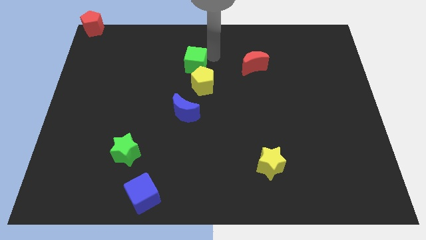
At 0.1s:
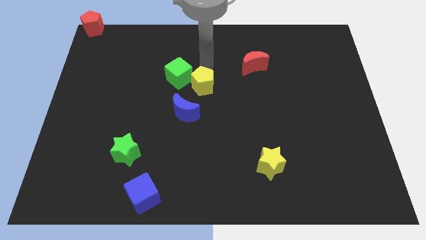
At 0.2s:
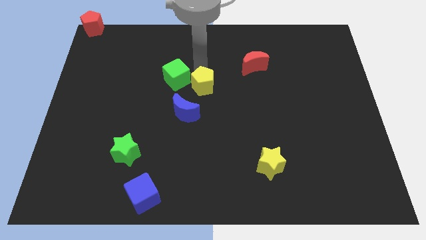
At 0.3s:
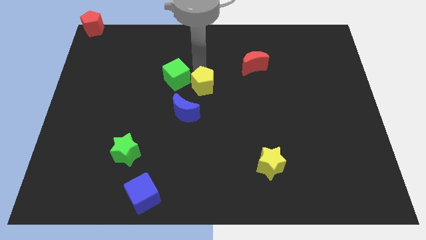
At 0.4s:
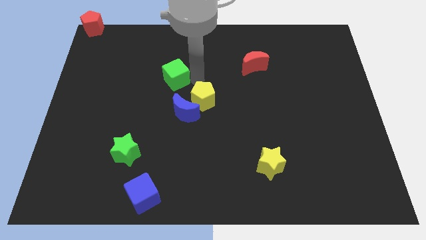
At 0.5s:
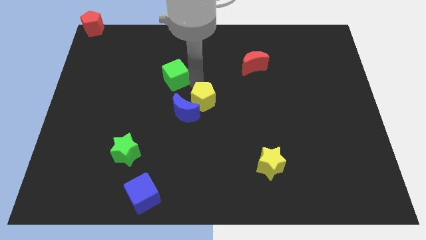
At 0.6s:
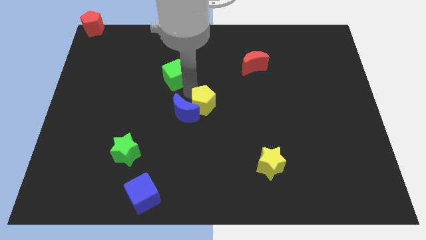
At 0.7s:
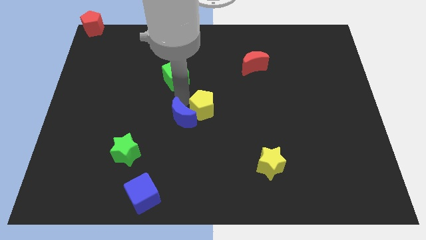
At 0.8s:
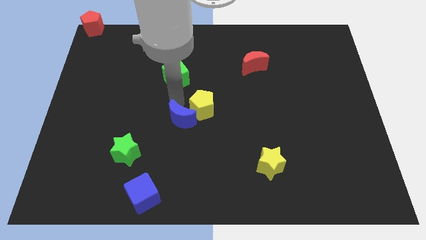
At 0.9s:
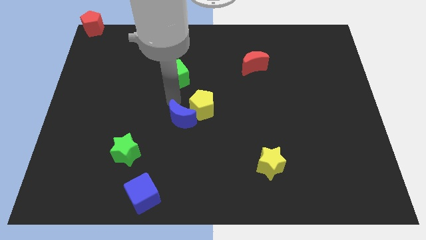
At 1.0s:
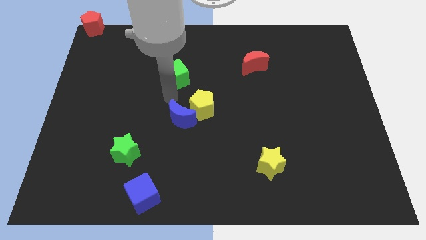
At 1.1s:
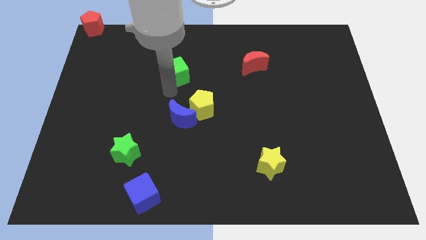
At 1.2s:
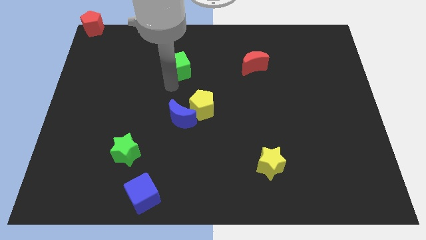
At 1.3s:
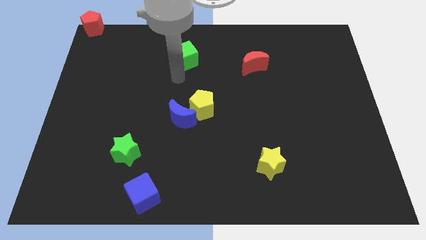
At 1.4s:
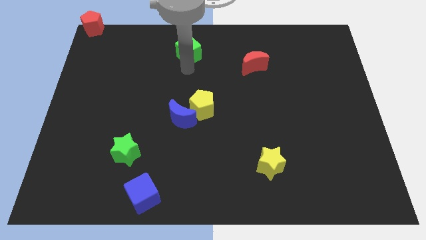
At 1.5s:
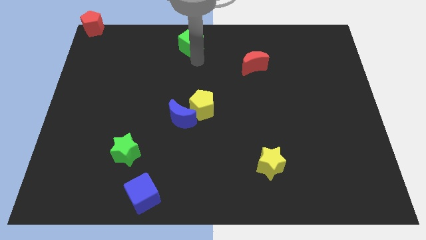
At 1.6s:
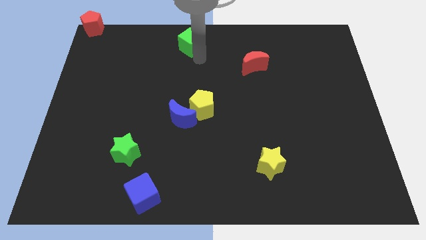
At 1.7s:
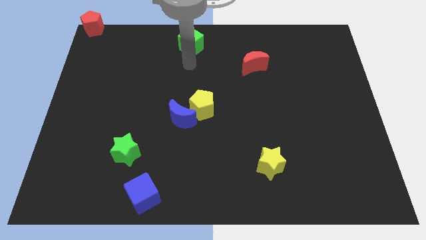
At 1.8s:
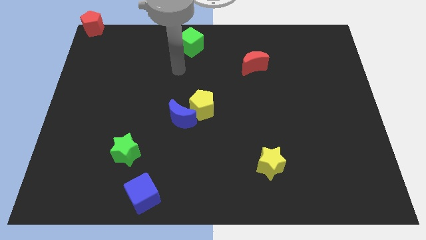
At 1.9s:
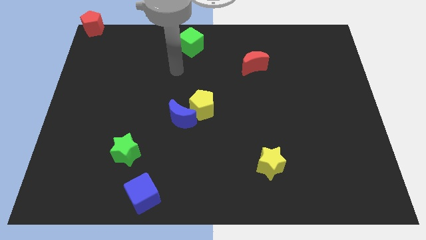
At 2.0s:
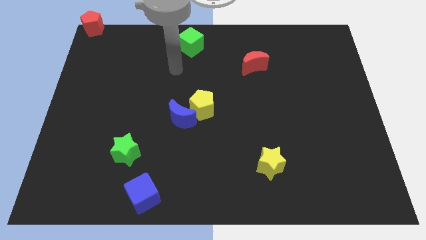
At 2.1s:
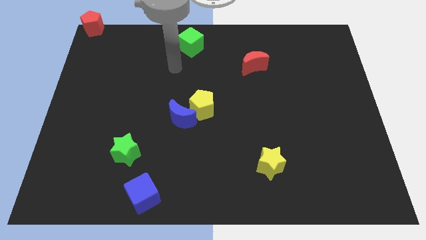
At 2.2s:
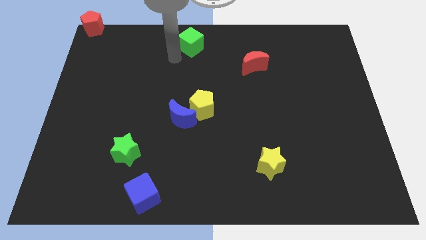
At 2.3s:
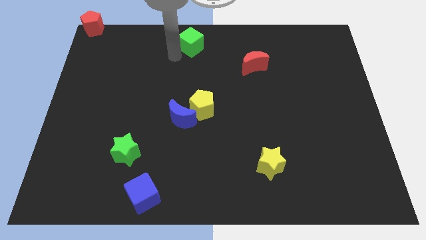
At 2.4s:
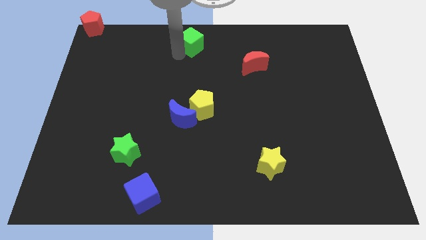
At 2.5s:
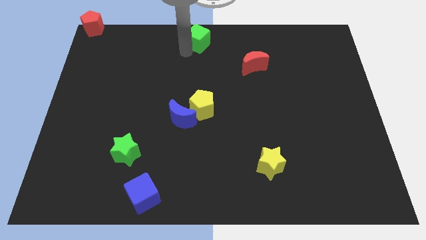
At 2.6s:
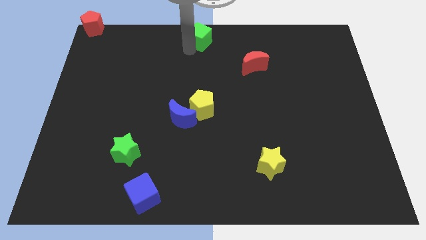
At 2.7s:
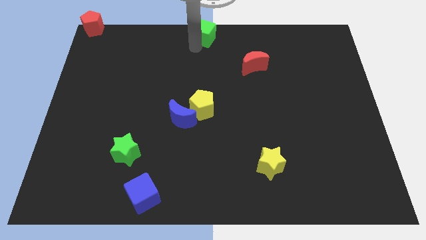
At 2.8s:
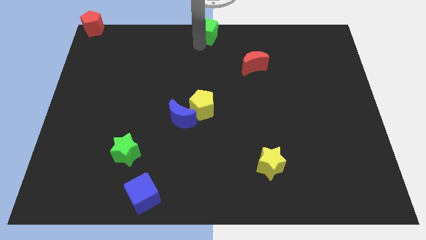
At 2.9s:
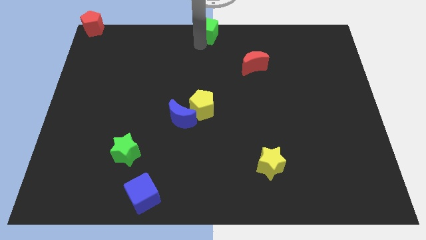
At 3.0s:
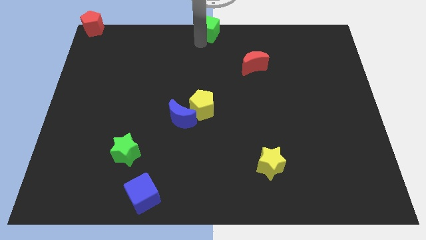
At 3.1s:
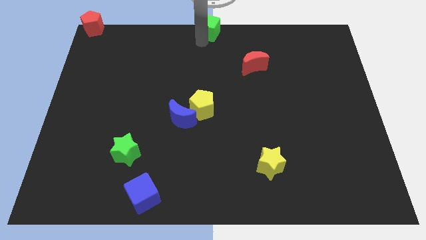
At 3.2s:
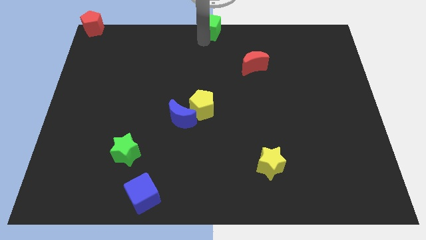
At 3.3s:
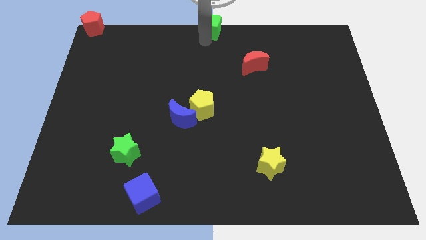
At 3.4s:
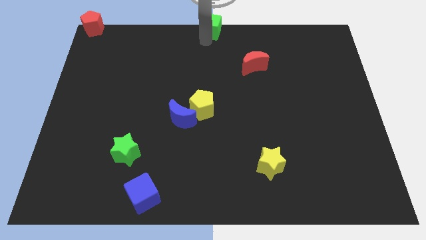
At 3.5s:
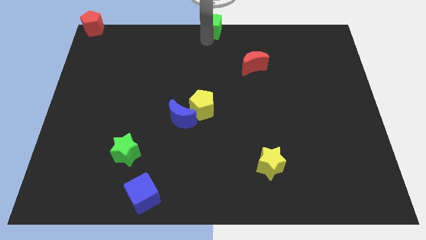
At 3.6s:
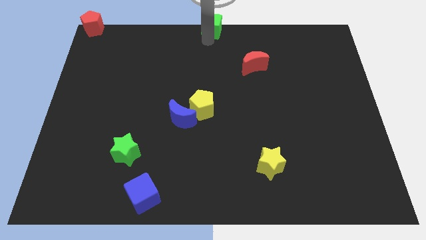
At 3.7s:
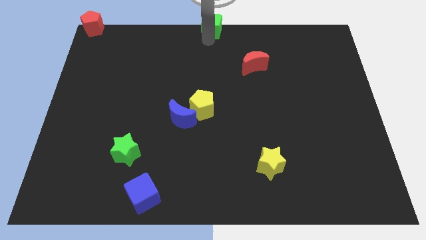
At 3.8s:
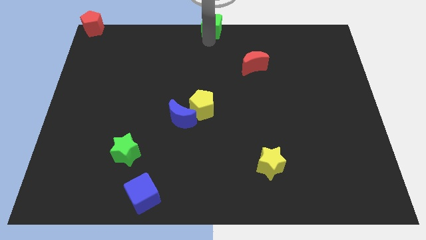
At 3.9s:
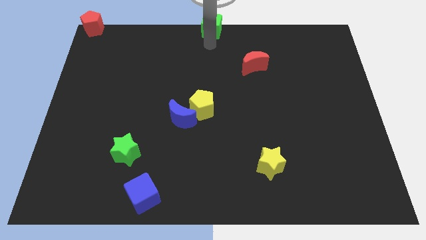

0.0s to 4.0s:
move the green cube to the top center of the board

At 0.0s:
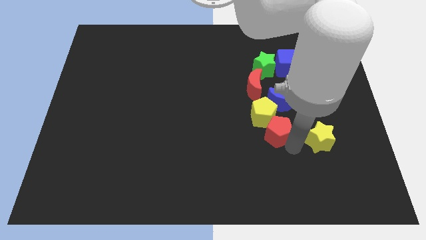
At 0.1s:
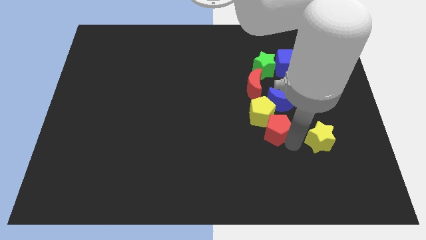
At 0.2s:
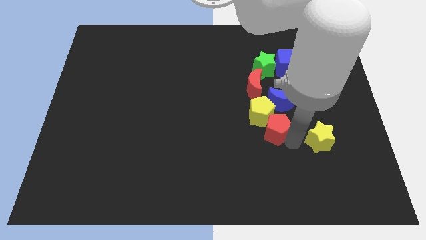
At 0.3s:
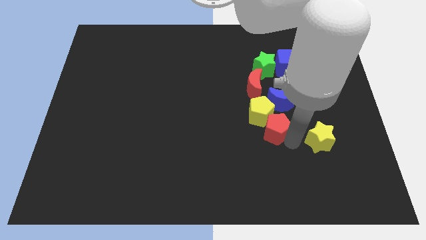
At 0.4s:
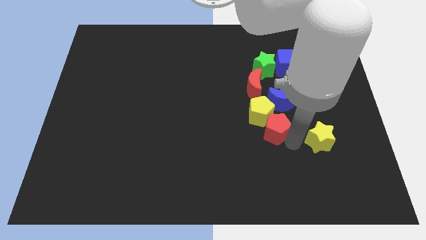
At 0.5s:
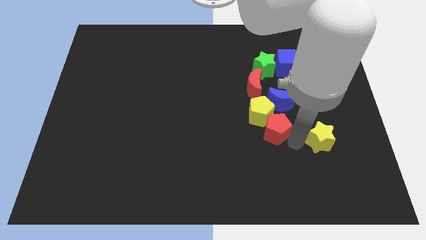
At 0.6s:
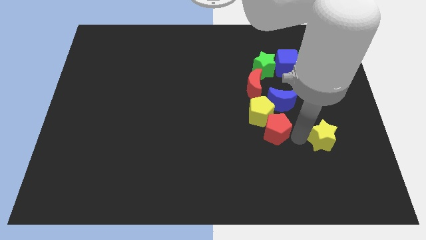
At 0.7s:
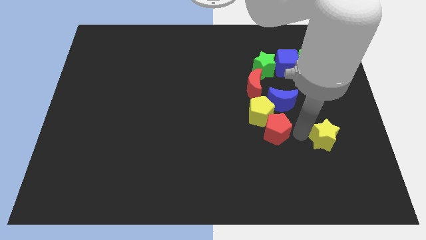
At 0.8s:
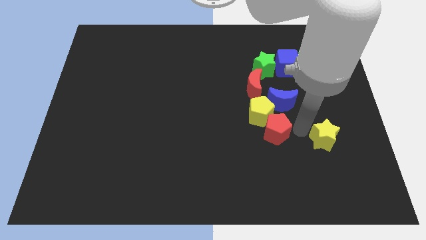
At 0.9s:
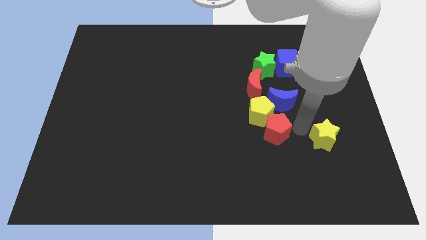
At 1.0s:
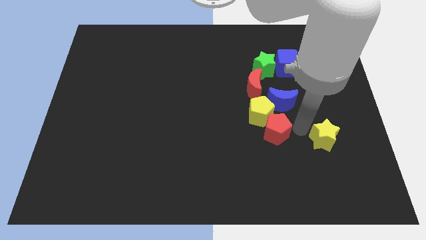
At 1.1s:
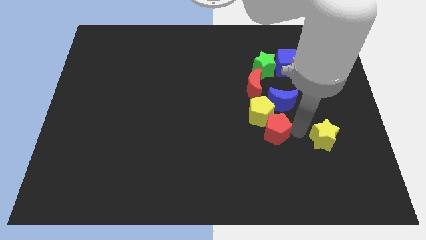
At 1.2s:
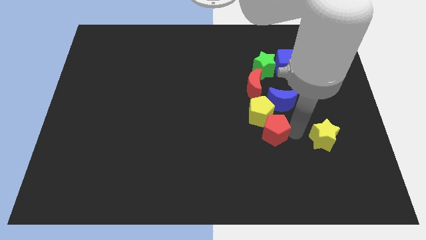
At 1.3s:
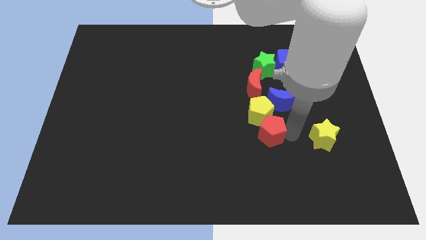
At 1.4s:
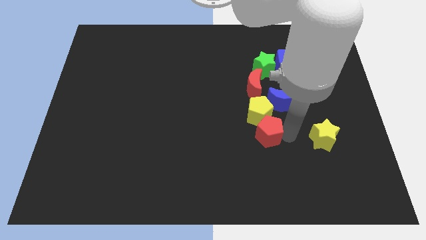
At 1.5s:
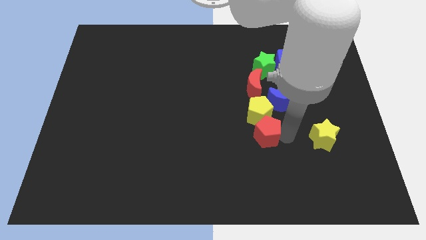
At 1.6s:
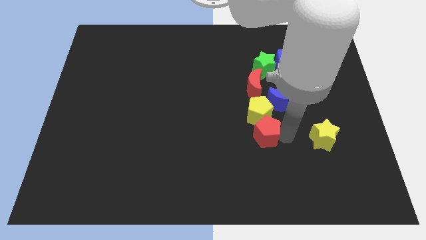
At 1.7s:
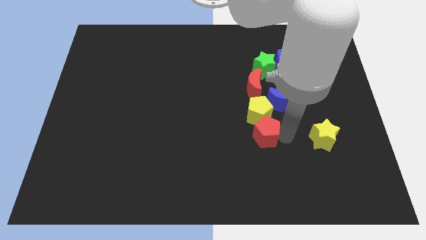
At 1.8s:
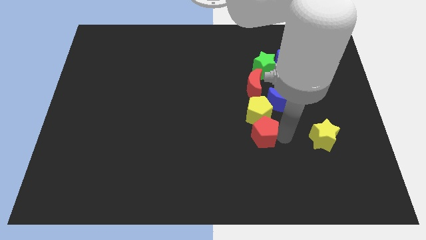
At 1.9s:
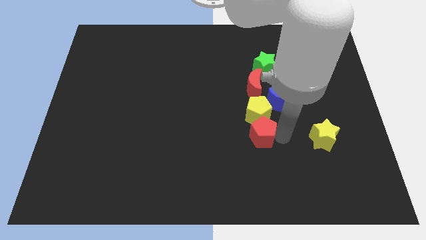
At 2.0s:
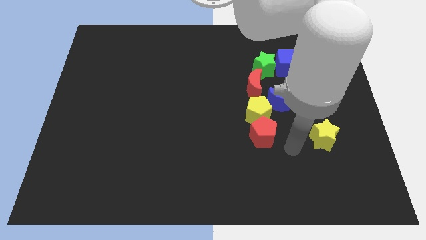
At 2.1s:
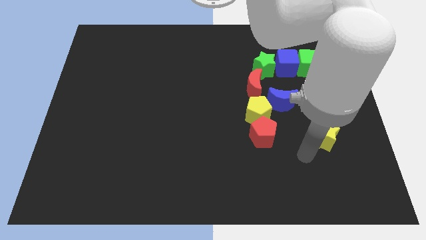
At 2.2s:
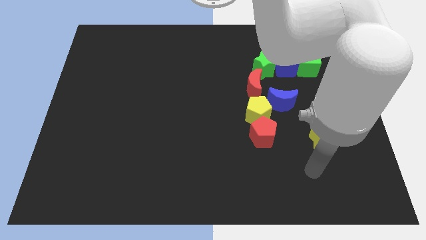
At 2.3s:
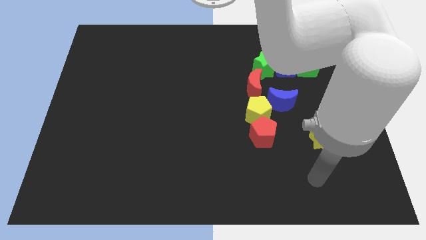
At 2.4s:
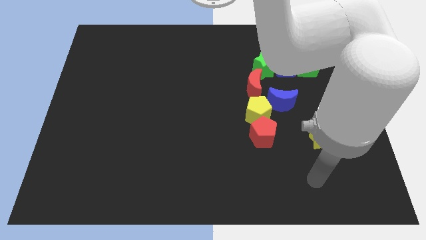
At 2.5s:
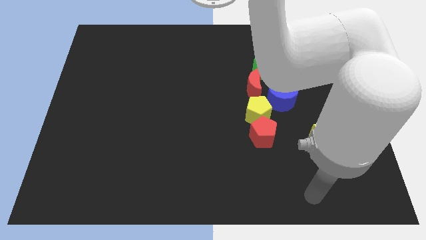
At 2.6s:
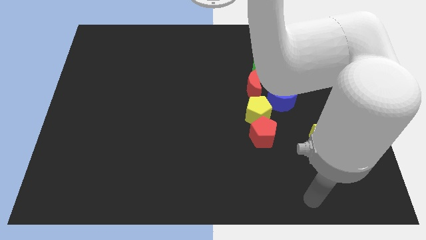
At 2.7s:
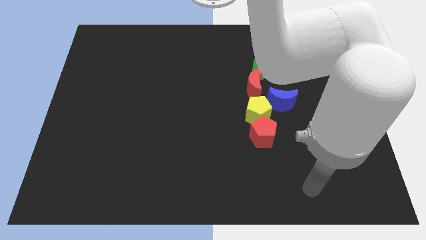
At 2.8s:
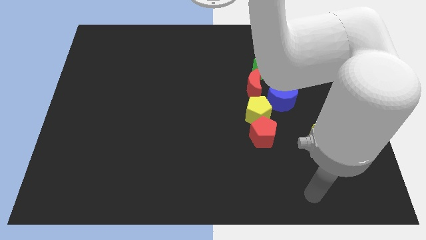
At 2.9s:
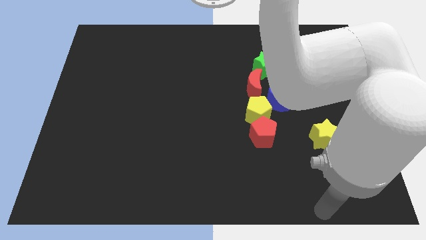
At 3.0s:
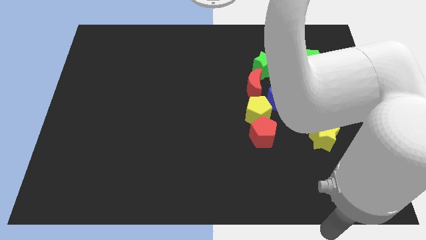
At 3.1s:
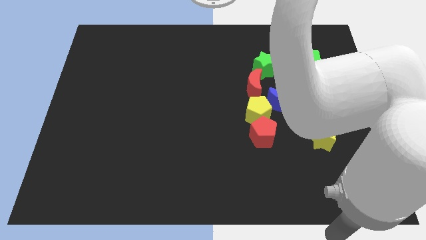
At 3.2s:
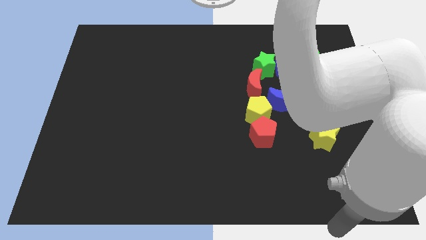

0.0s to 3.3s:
push the red pentagon to the bottom of the yellow pentagon

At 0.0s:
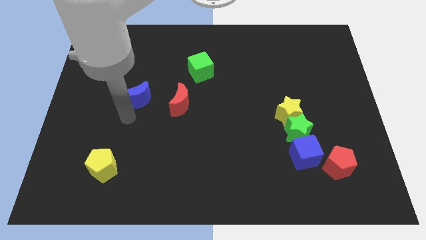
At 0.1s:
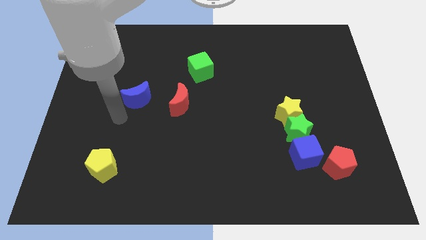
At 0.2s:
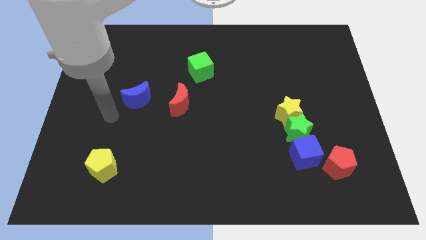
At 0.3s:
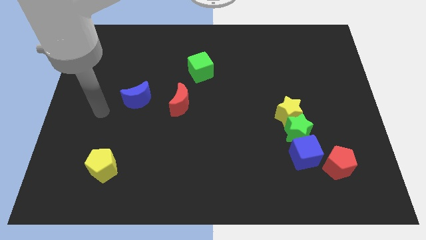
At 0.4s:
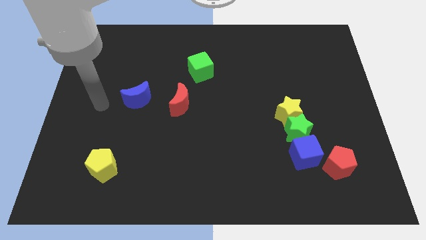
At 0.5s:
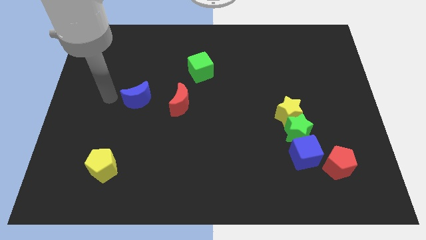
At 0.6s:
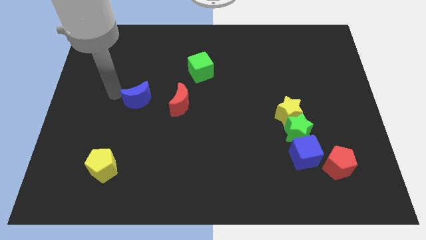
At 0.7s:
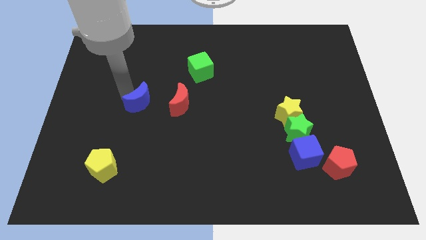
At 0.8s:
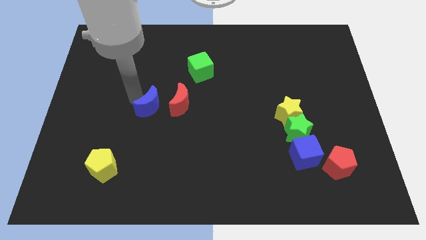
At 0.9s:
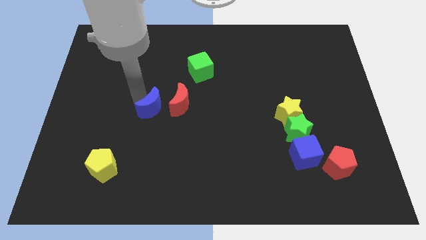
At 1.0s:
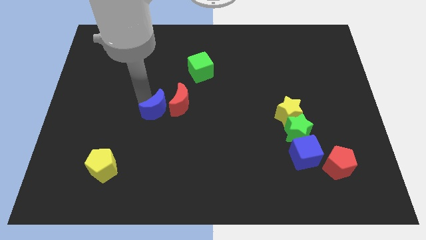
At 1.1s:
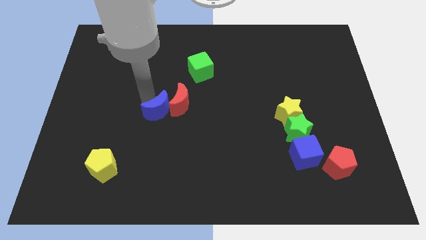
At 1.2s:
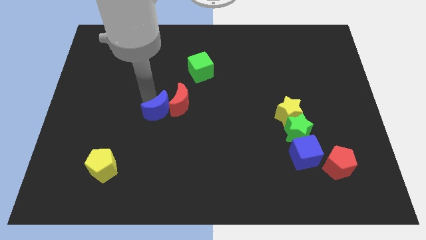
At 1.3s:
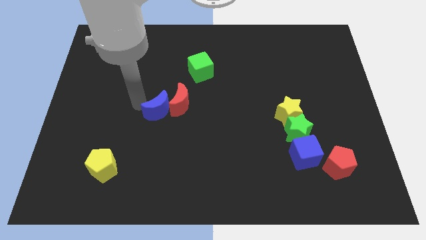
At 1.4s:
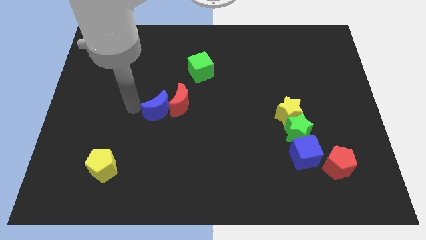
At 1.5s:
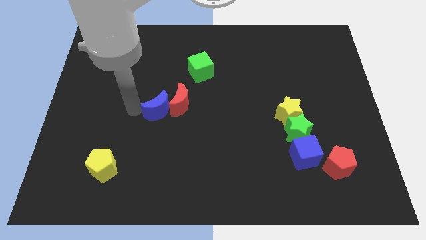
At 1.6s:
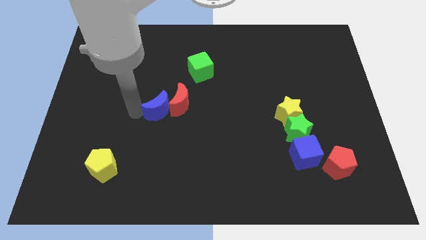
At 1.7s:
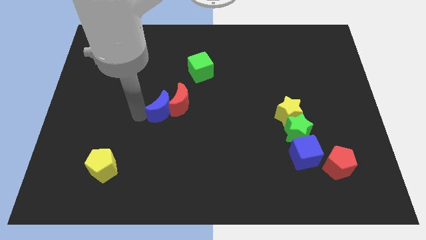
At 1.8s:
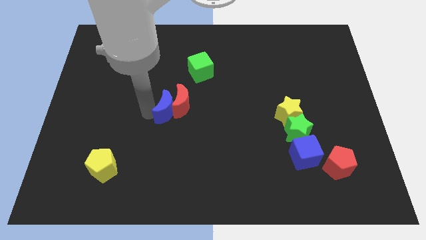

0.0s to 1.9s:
push the blue moon into the red moon
